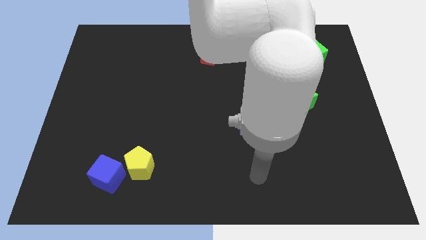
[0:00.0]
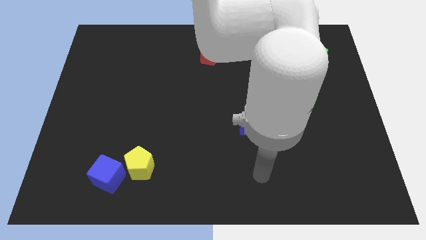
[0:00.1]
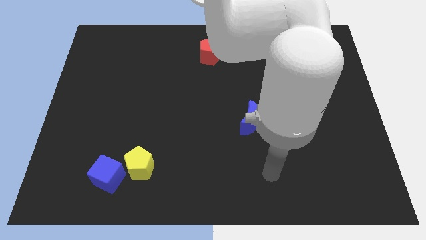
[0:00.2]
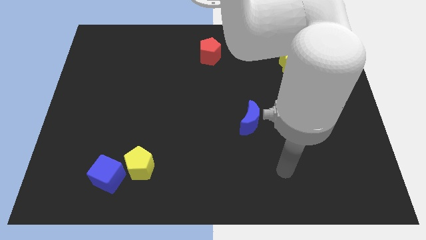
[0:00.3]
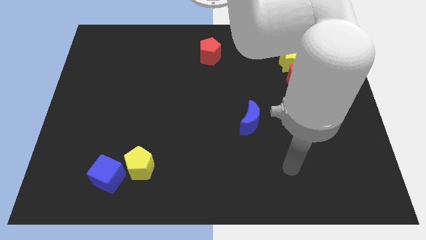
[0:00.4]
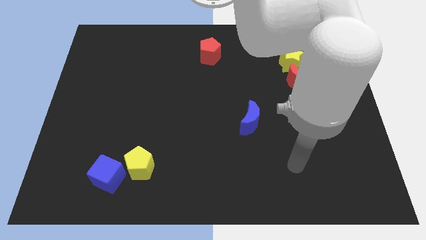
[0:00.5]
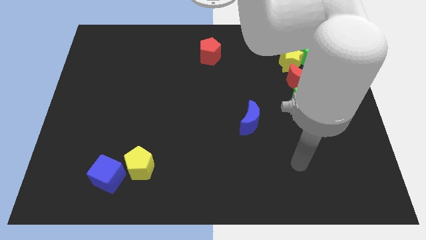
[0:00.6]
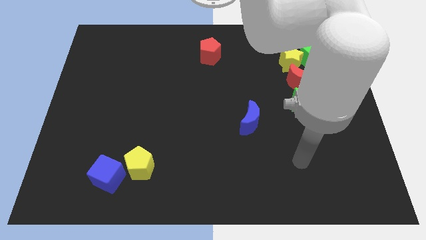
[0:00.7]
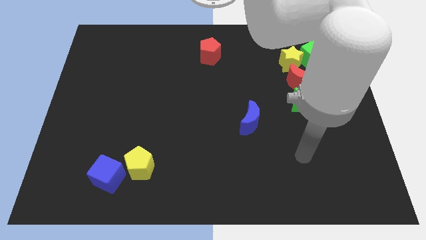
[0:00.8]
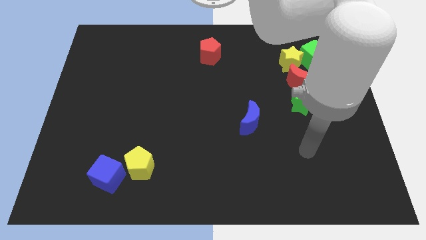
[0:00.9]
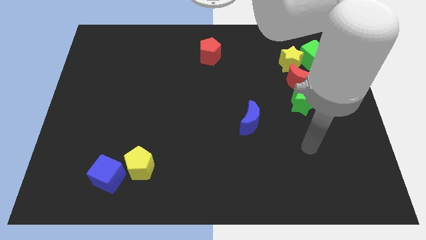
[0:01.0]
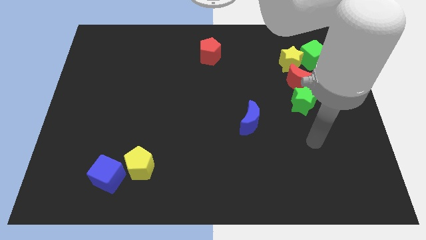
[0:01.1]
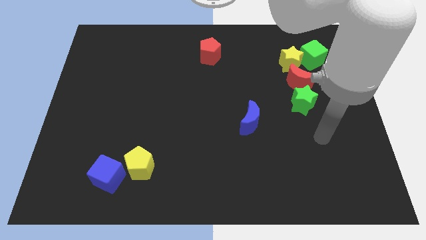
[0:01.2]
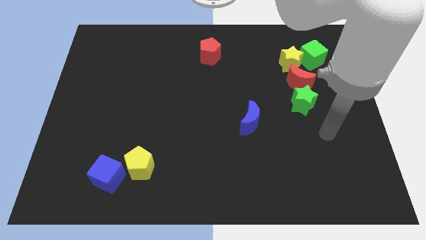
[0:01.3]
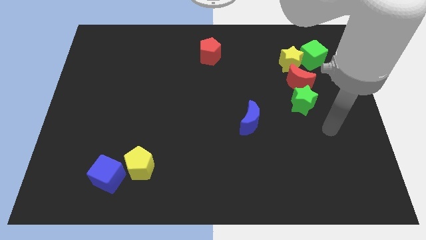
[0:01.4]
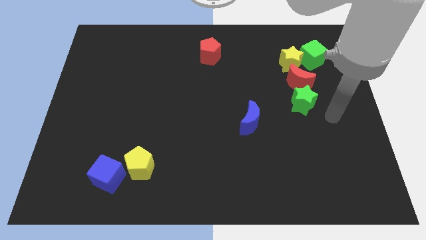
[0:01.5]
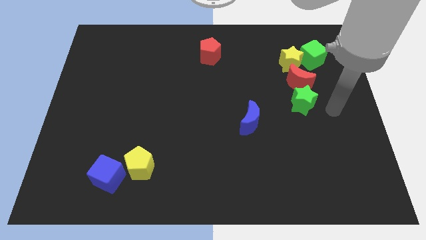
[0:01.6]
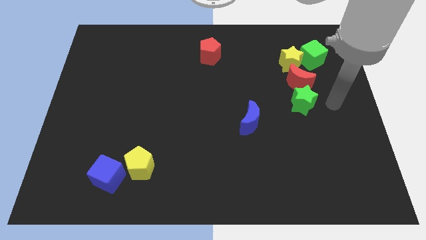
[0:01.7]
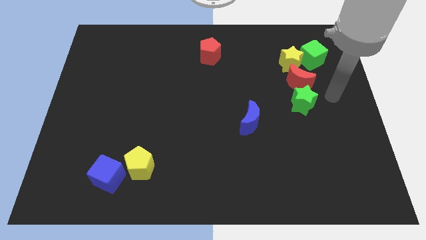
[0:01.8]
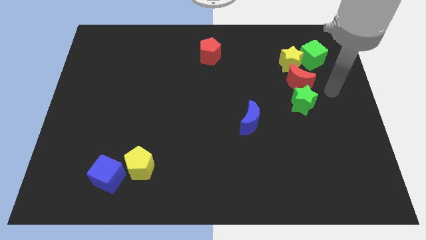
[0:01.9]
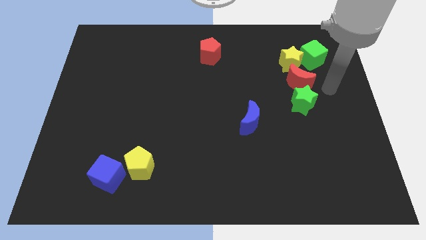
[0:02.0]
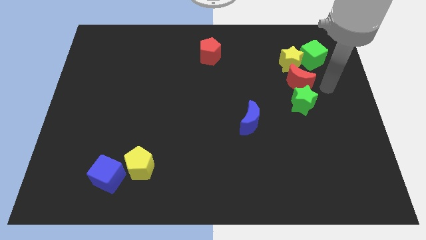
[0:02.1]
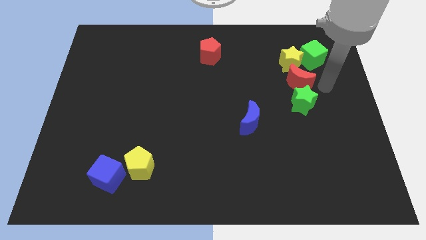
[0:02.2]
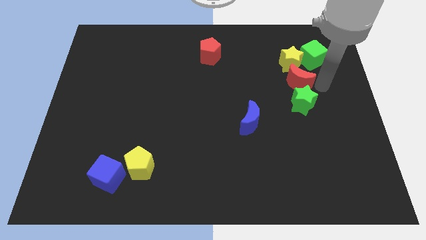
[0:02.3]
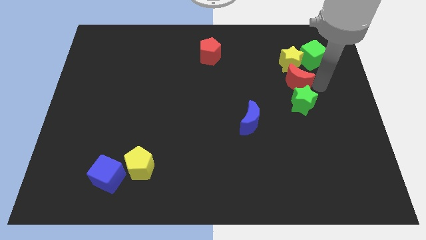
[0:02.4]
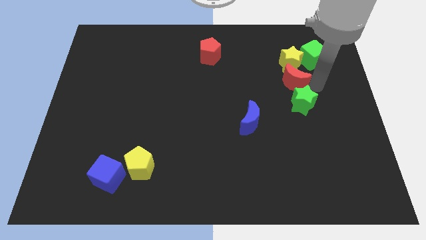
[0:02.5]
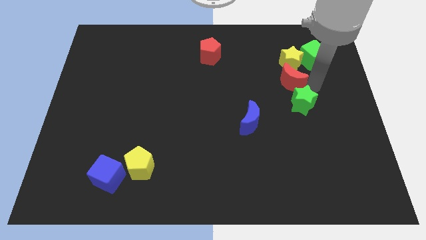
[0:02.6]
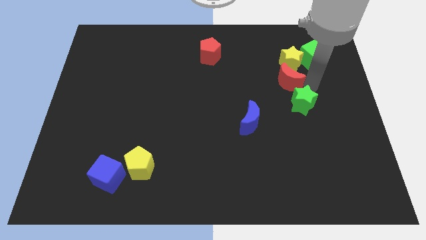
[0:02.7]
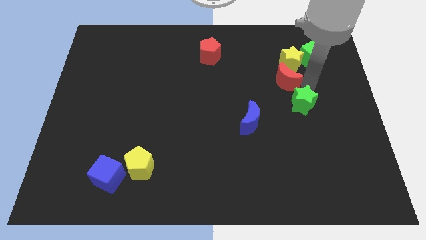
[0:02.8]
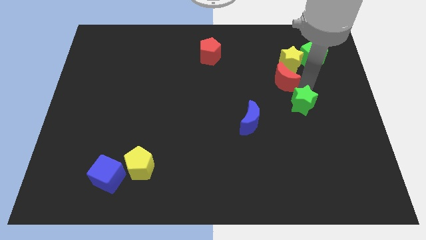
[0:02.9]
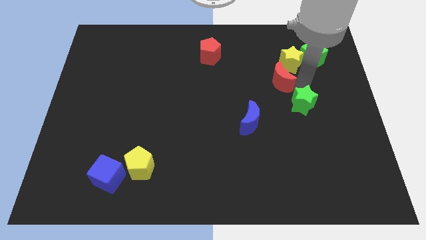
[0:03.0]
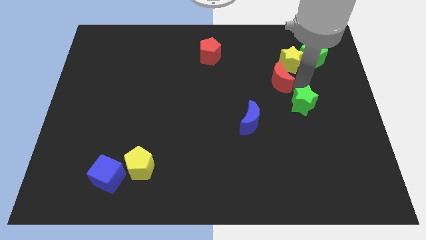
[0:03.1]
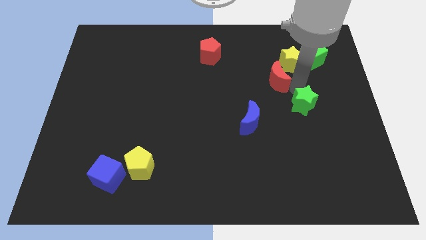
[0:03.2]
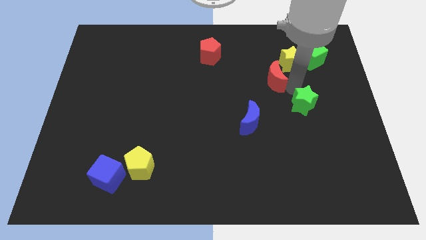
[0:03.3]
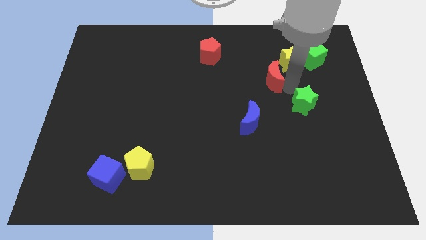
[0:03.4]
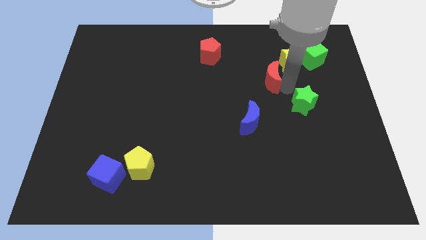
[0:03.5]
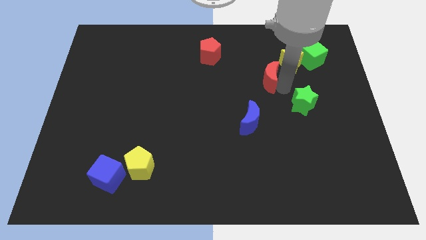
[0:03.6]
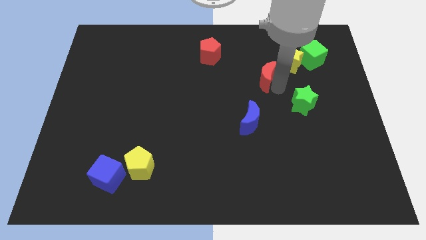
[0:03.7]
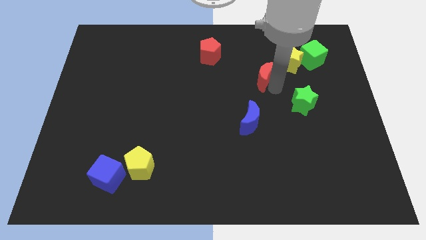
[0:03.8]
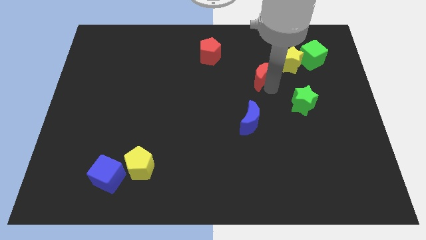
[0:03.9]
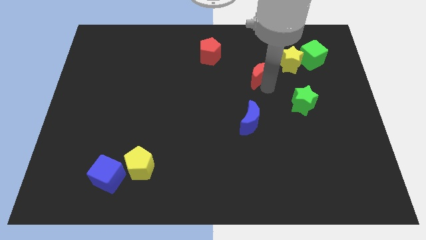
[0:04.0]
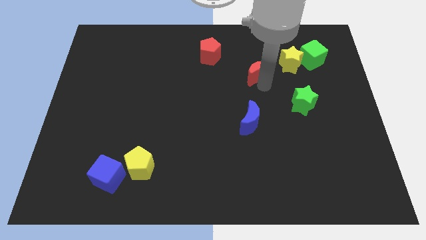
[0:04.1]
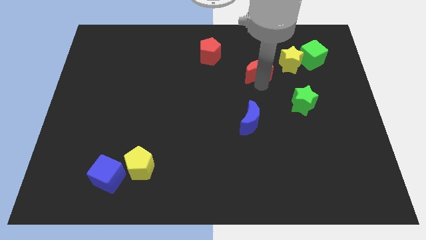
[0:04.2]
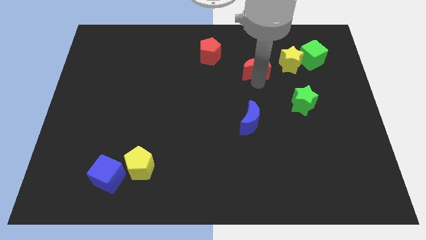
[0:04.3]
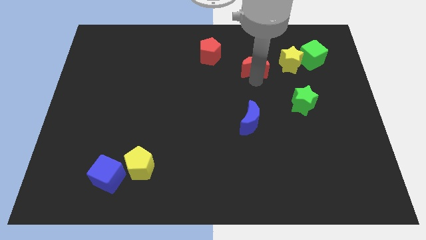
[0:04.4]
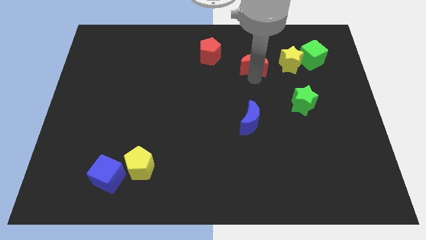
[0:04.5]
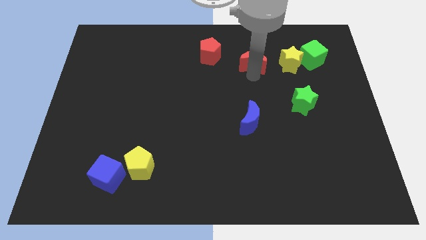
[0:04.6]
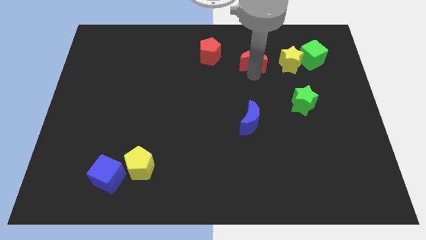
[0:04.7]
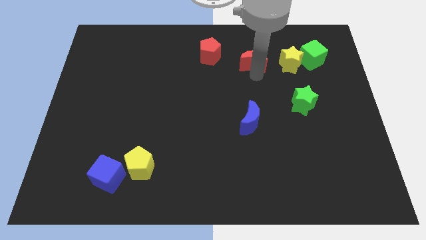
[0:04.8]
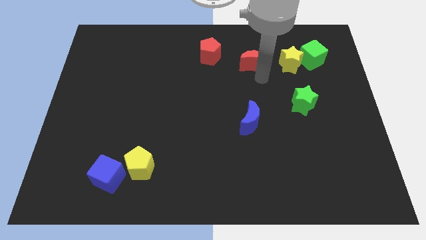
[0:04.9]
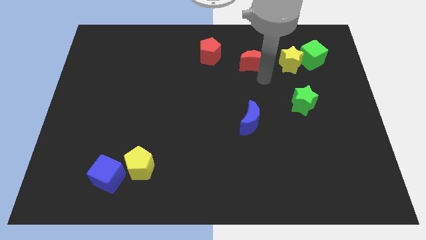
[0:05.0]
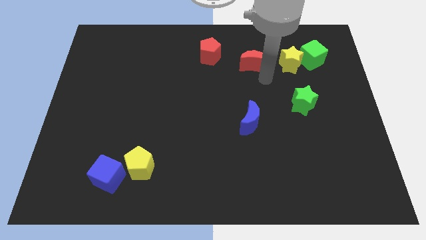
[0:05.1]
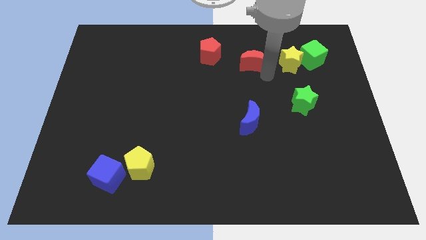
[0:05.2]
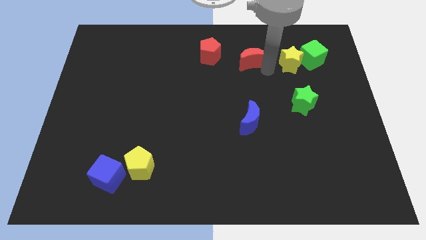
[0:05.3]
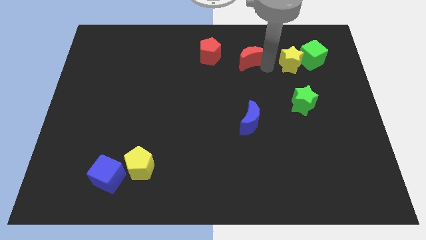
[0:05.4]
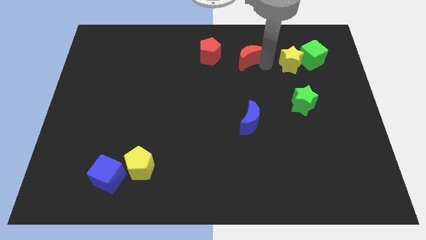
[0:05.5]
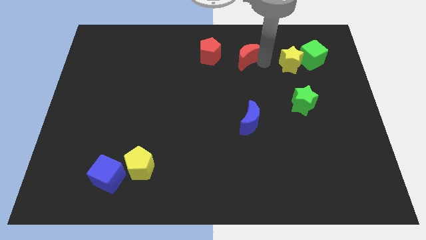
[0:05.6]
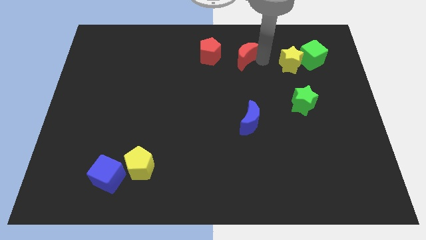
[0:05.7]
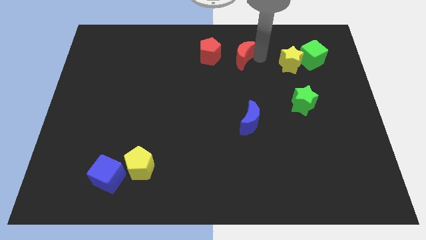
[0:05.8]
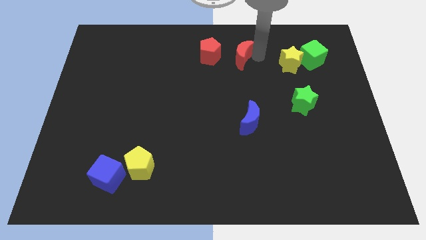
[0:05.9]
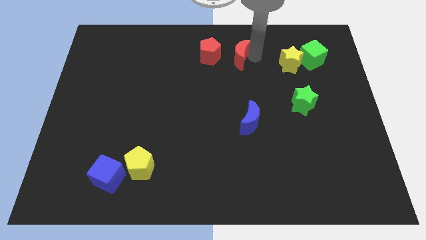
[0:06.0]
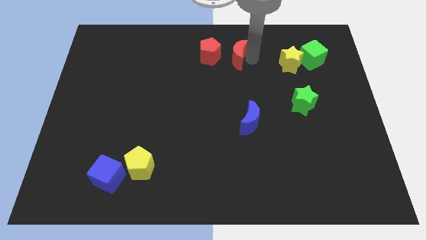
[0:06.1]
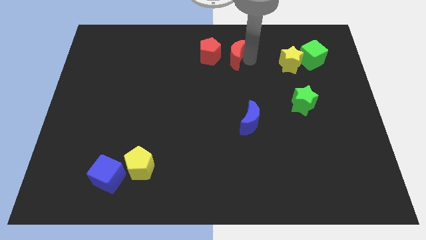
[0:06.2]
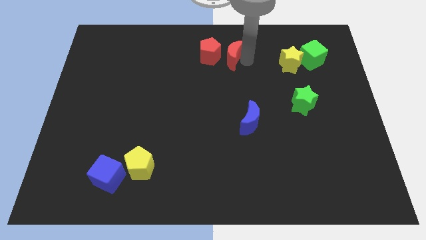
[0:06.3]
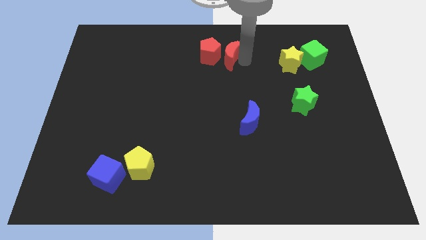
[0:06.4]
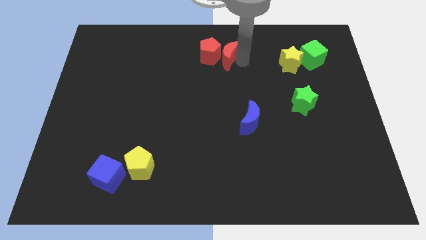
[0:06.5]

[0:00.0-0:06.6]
push the red moon to the red pentagon

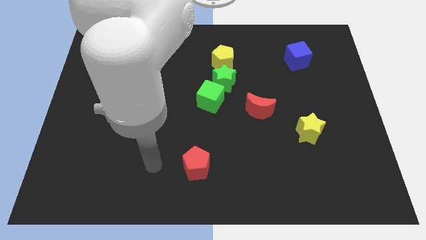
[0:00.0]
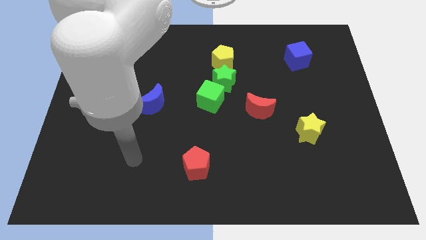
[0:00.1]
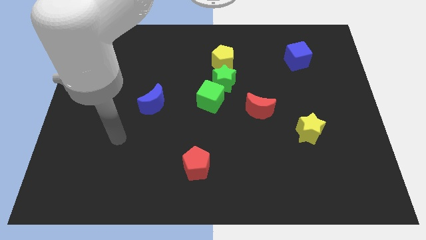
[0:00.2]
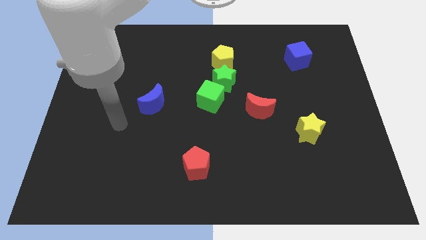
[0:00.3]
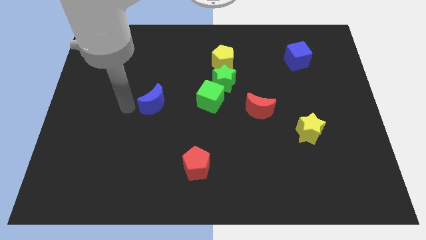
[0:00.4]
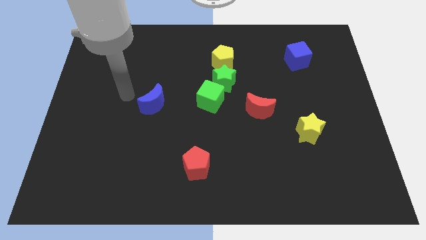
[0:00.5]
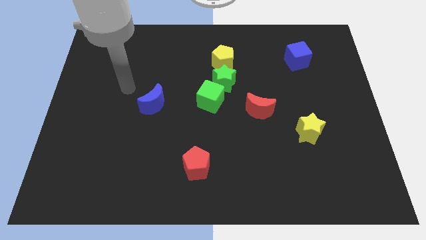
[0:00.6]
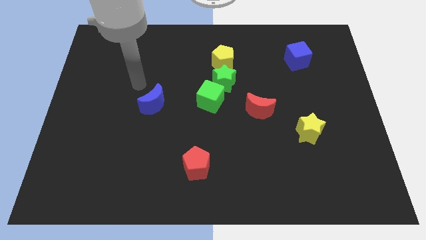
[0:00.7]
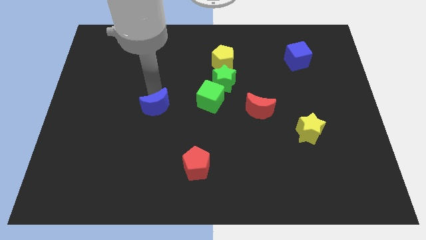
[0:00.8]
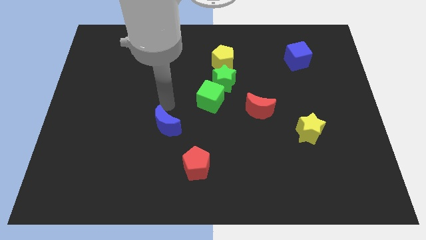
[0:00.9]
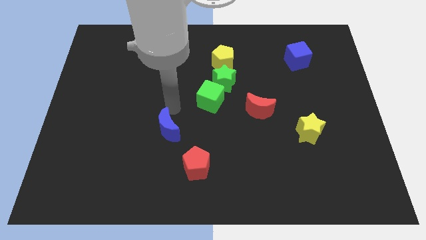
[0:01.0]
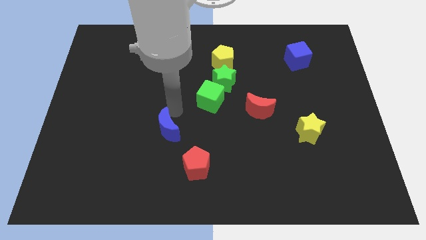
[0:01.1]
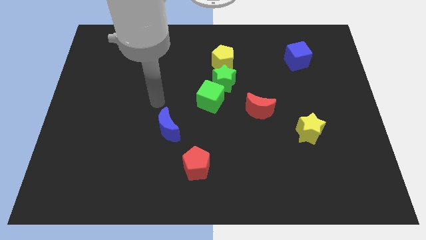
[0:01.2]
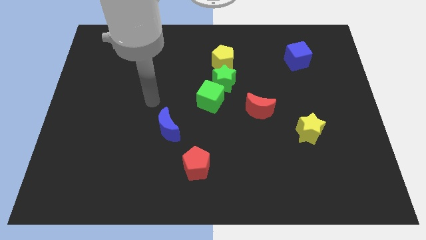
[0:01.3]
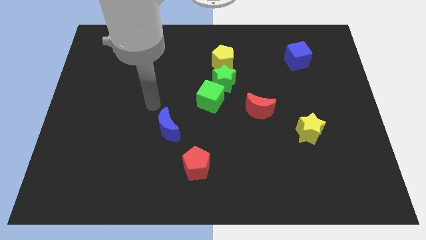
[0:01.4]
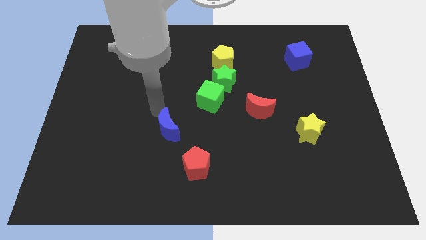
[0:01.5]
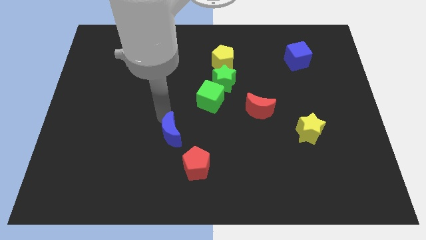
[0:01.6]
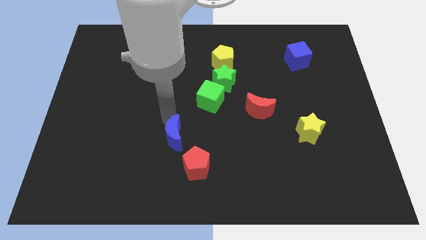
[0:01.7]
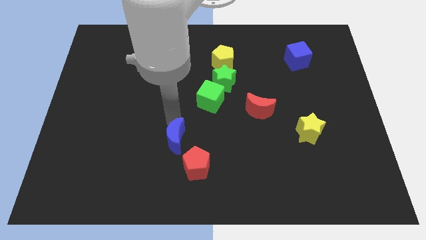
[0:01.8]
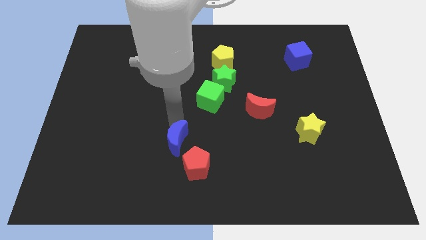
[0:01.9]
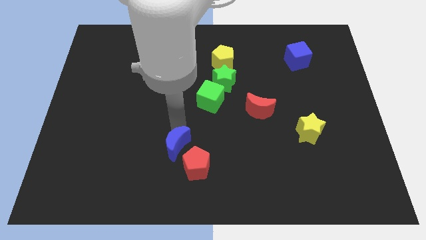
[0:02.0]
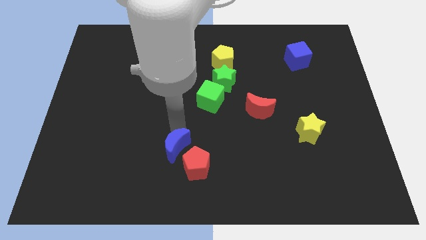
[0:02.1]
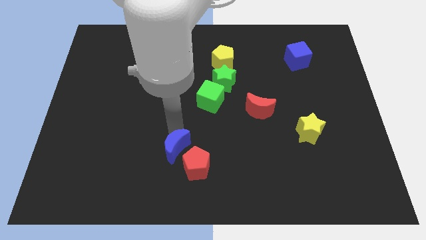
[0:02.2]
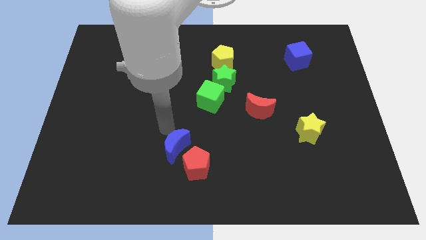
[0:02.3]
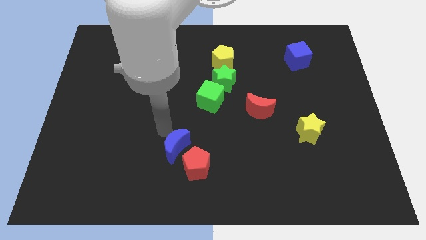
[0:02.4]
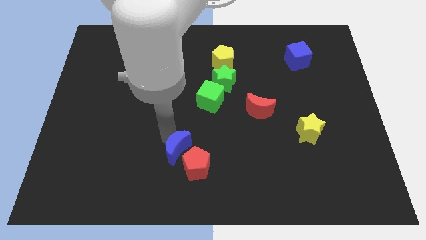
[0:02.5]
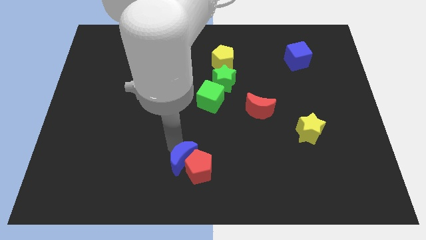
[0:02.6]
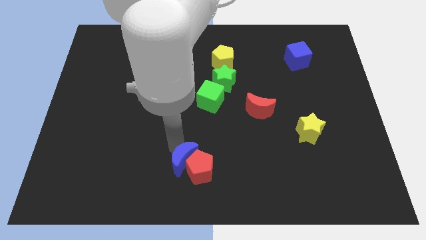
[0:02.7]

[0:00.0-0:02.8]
move the blue moon next to the red pentagon
